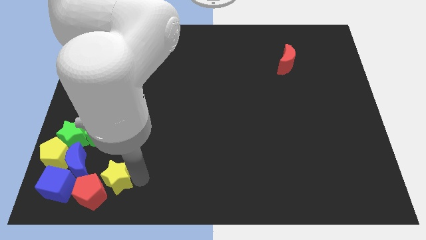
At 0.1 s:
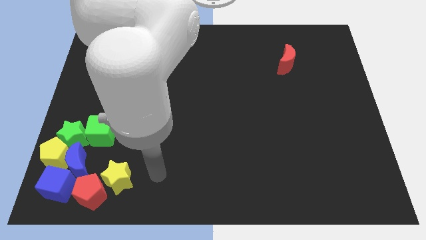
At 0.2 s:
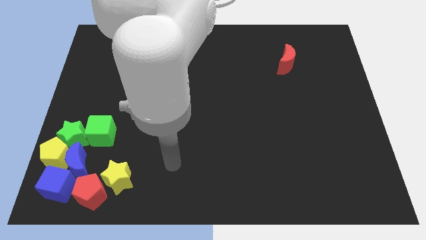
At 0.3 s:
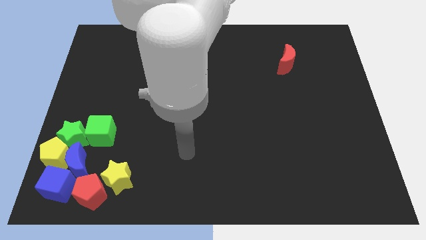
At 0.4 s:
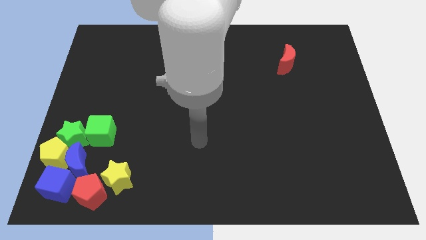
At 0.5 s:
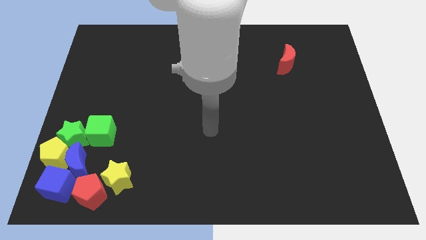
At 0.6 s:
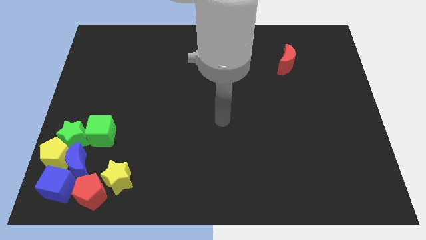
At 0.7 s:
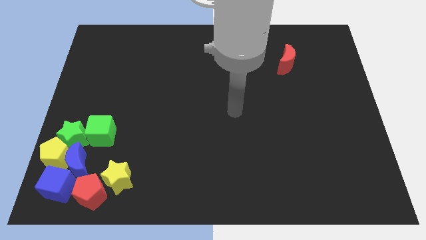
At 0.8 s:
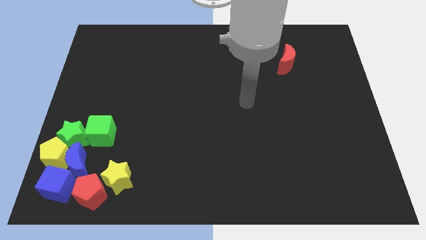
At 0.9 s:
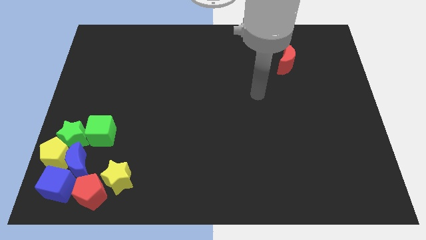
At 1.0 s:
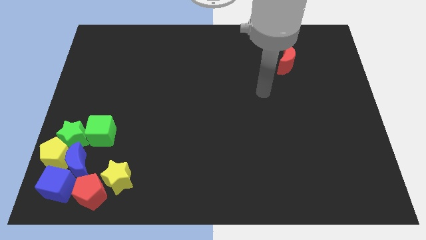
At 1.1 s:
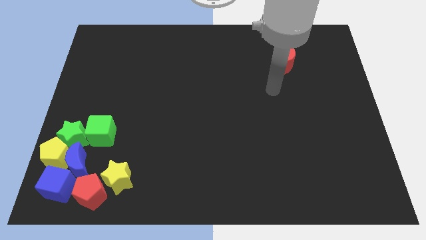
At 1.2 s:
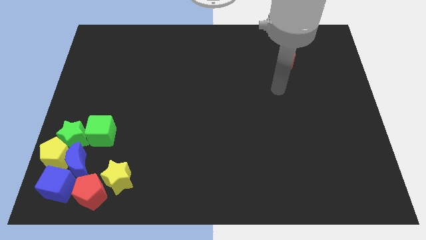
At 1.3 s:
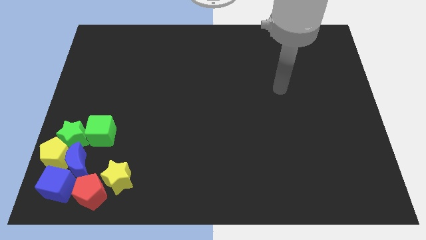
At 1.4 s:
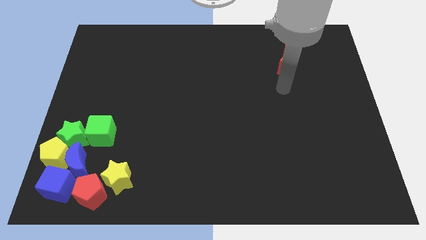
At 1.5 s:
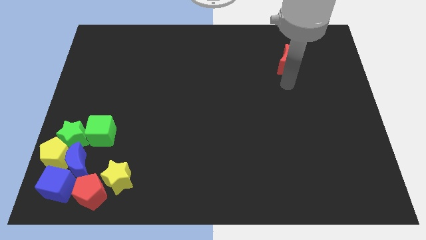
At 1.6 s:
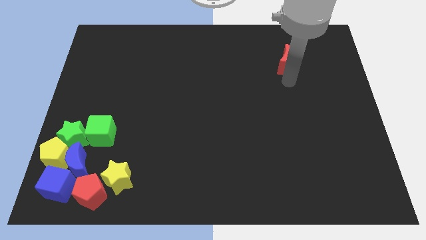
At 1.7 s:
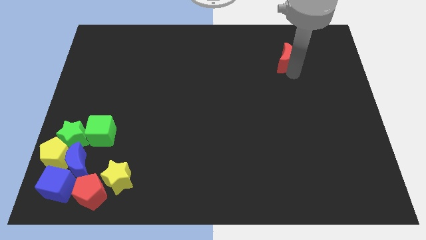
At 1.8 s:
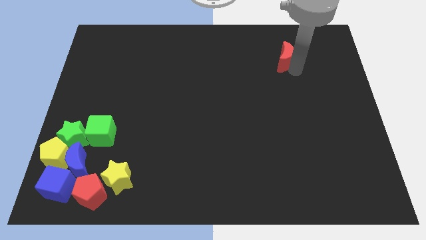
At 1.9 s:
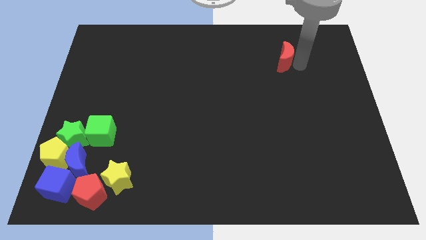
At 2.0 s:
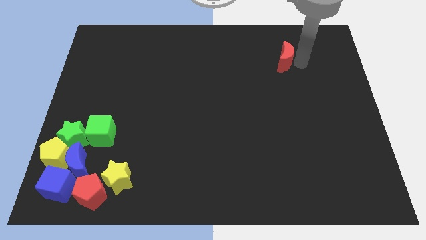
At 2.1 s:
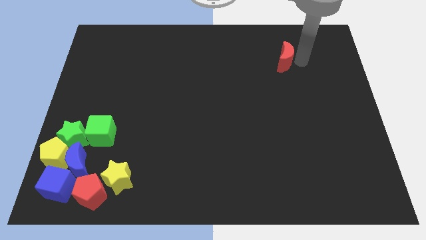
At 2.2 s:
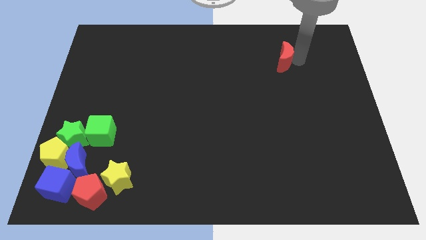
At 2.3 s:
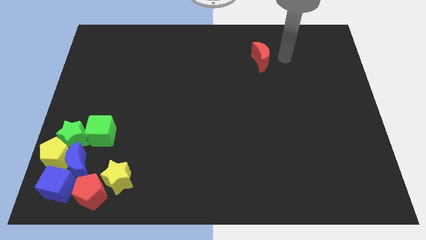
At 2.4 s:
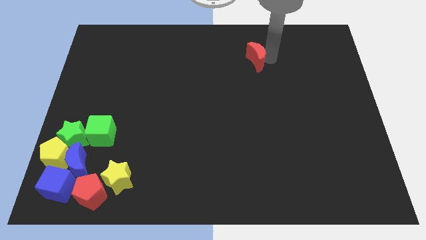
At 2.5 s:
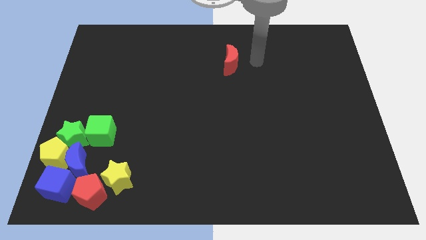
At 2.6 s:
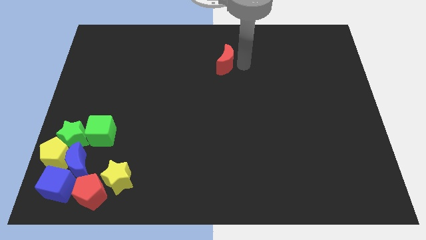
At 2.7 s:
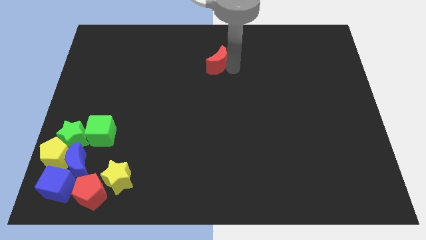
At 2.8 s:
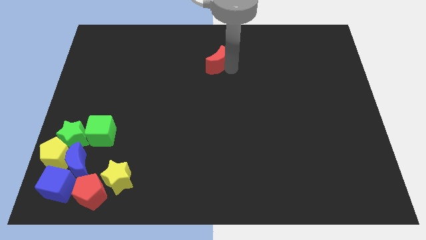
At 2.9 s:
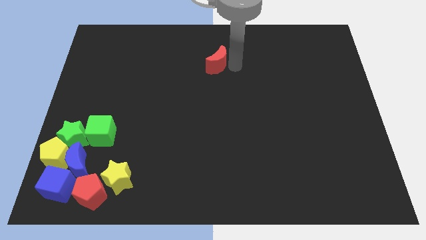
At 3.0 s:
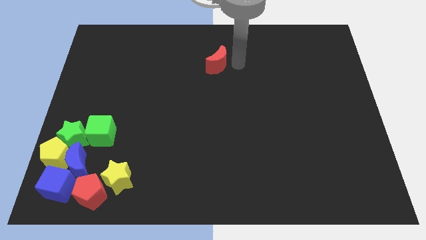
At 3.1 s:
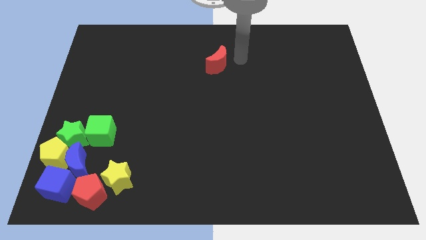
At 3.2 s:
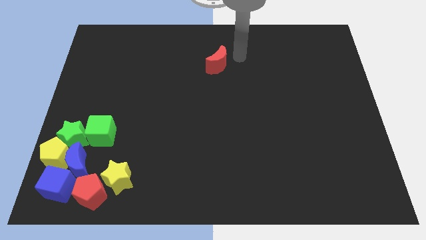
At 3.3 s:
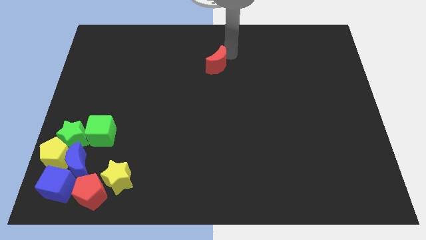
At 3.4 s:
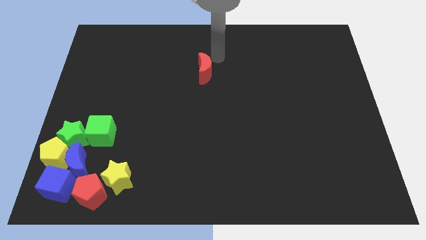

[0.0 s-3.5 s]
push the red crescent towards the top center of the board

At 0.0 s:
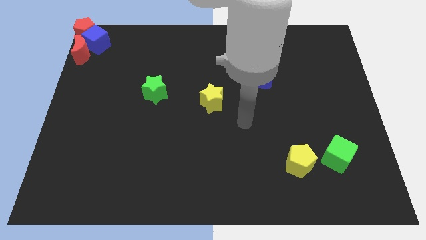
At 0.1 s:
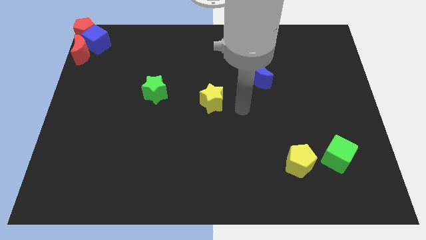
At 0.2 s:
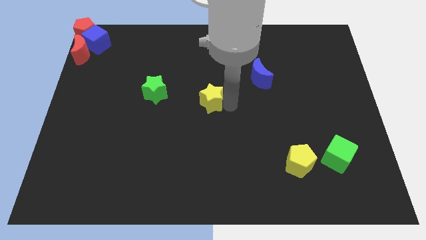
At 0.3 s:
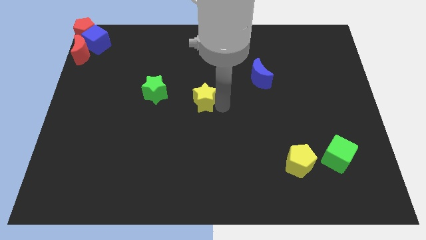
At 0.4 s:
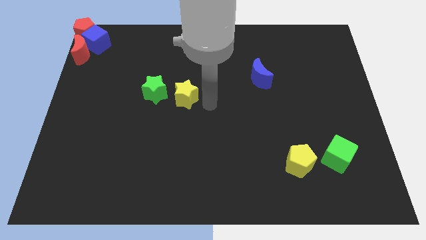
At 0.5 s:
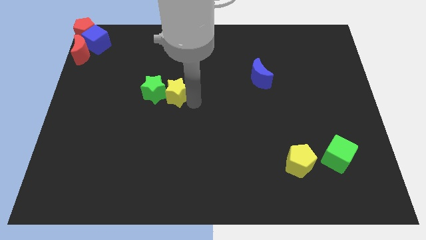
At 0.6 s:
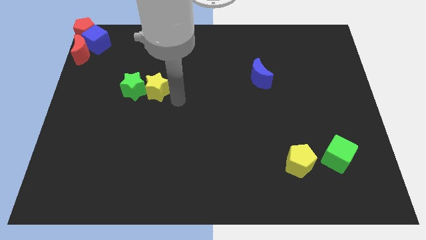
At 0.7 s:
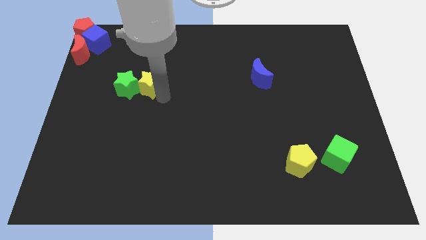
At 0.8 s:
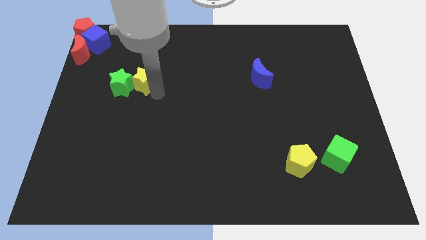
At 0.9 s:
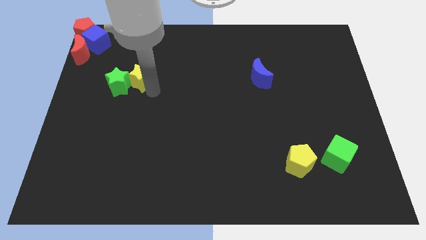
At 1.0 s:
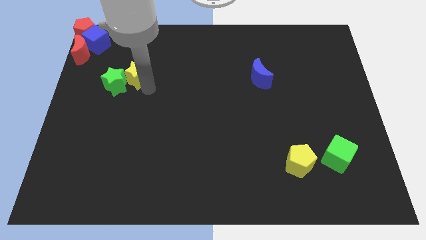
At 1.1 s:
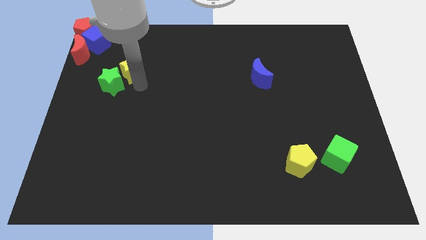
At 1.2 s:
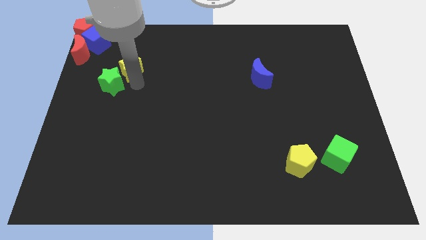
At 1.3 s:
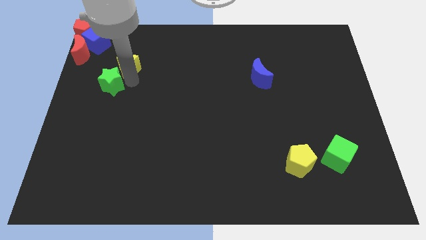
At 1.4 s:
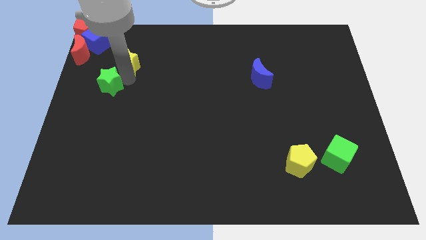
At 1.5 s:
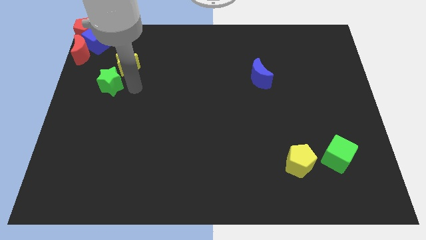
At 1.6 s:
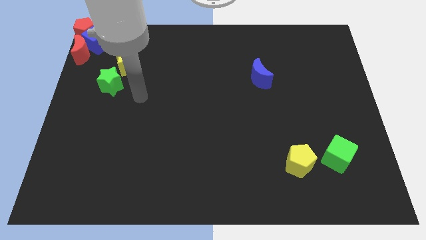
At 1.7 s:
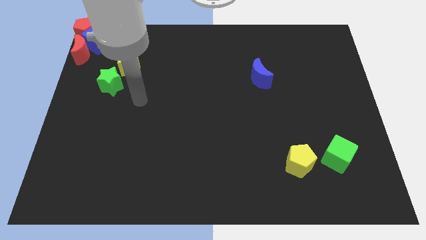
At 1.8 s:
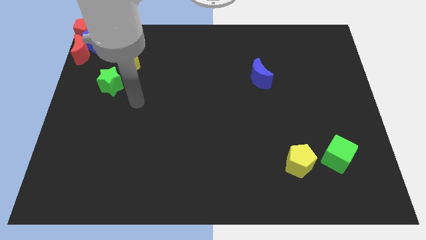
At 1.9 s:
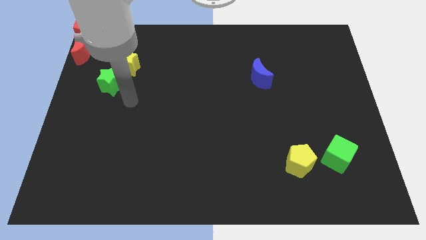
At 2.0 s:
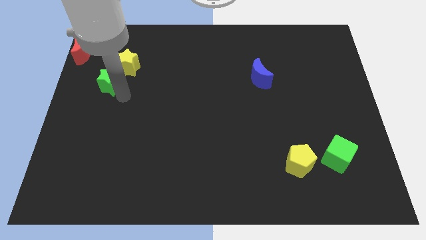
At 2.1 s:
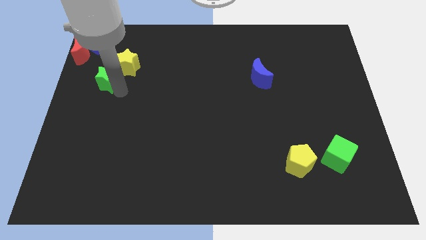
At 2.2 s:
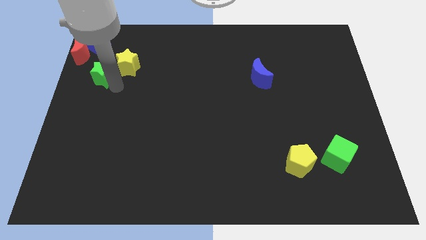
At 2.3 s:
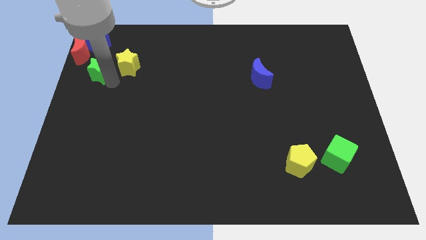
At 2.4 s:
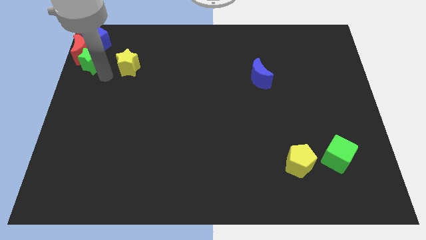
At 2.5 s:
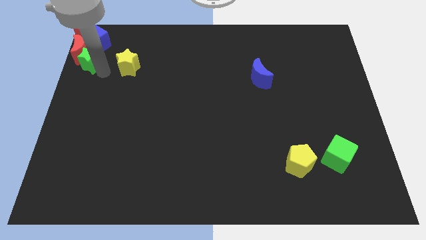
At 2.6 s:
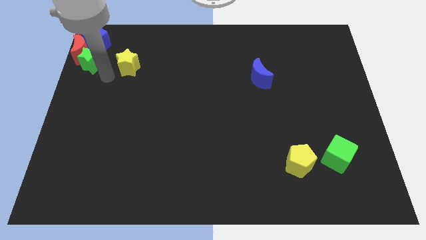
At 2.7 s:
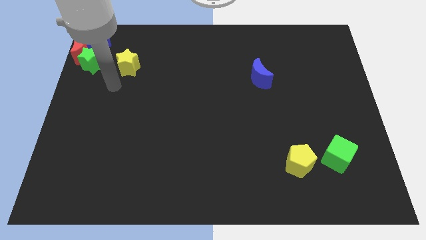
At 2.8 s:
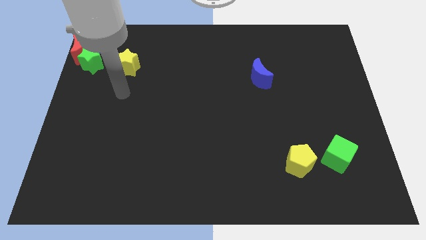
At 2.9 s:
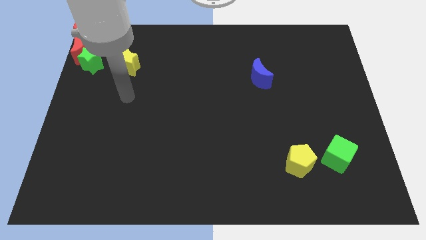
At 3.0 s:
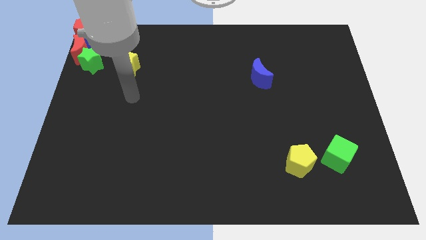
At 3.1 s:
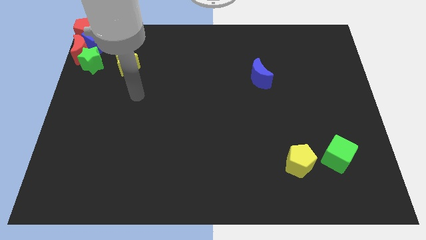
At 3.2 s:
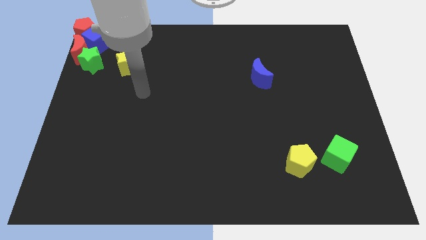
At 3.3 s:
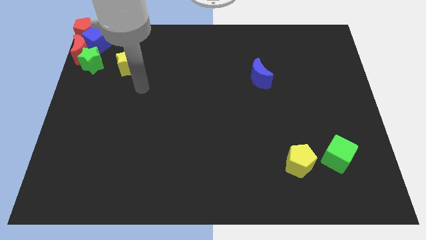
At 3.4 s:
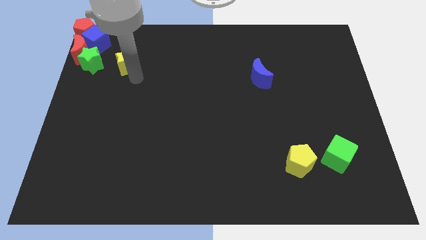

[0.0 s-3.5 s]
push the green star into the red crescent

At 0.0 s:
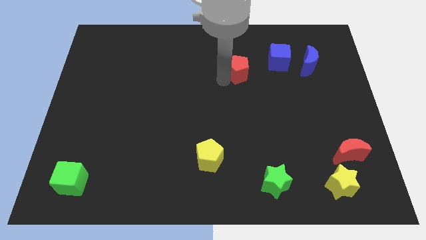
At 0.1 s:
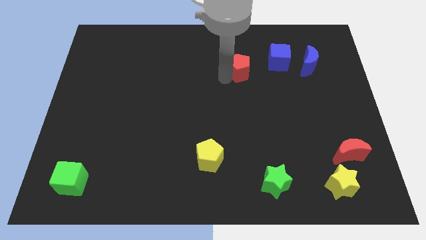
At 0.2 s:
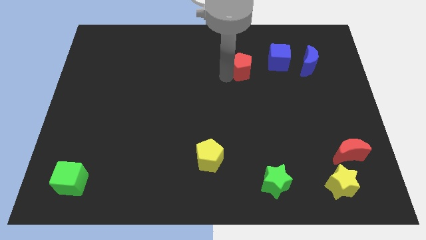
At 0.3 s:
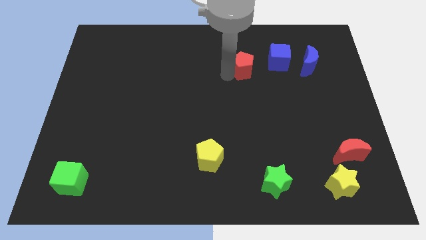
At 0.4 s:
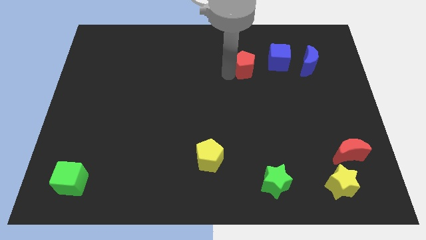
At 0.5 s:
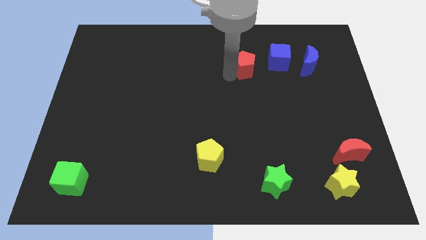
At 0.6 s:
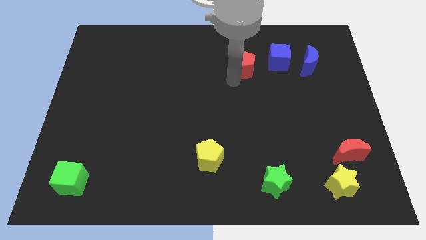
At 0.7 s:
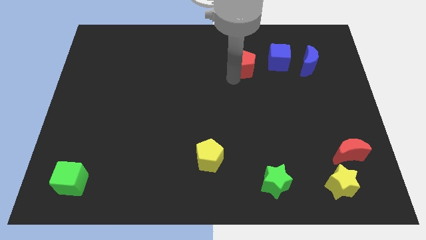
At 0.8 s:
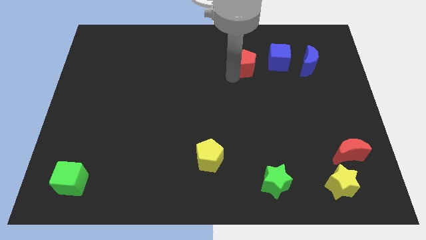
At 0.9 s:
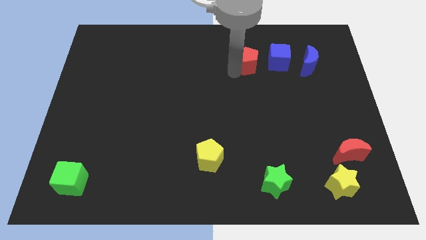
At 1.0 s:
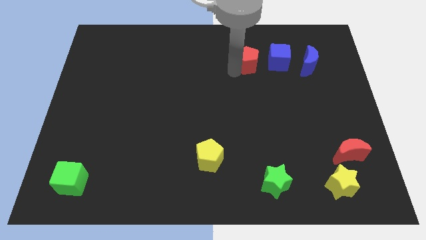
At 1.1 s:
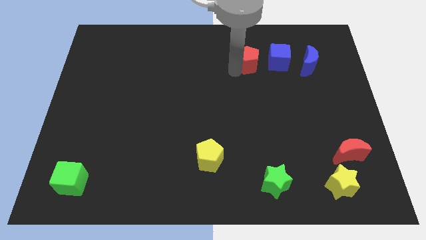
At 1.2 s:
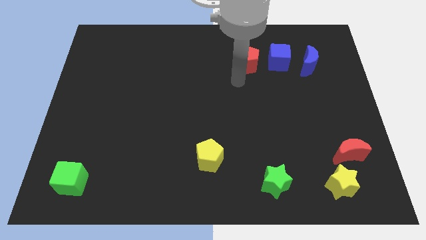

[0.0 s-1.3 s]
place the arm towards the left side of the red pentagon

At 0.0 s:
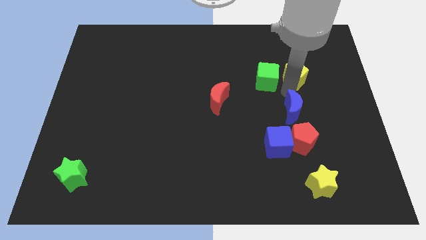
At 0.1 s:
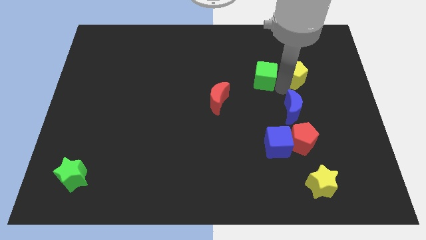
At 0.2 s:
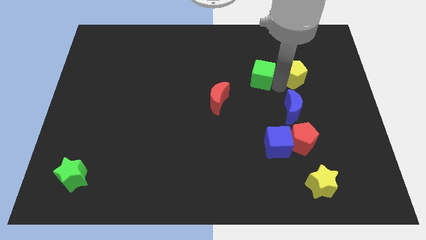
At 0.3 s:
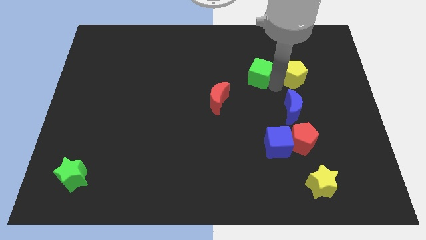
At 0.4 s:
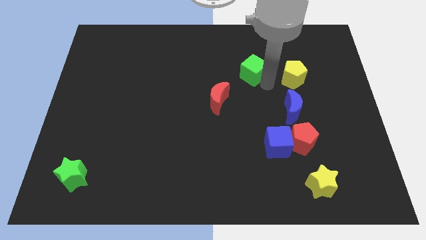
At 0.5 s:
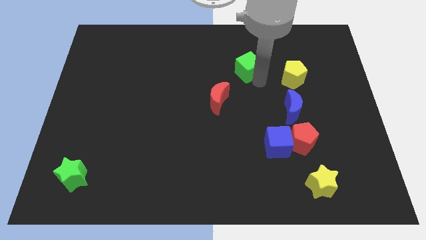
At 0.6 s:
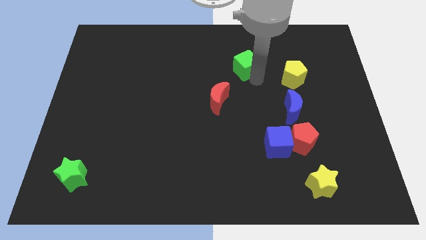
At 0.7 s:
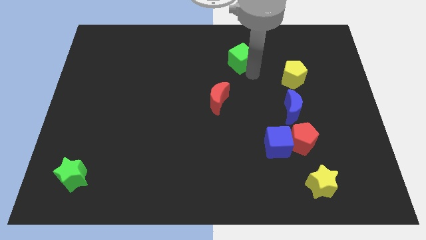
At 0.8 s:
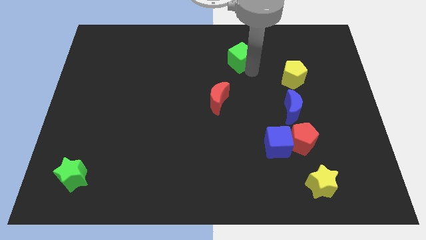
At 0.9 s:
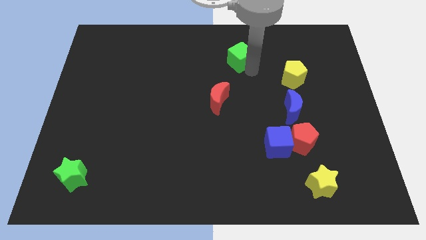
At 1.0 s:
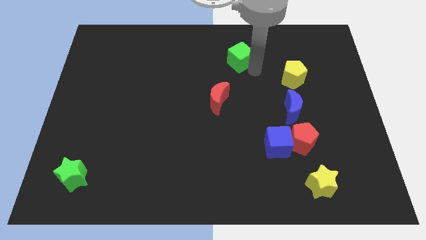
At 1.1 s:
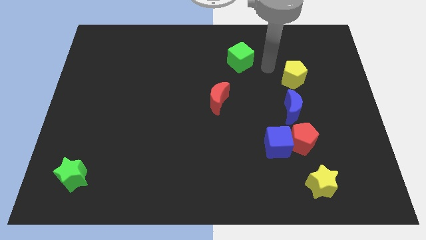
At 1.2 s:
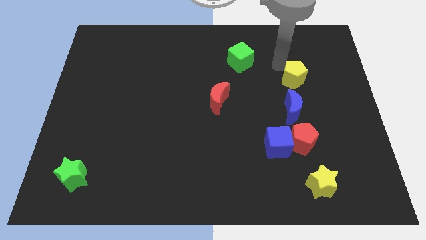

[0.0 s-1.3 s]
push green block to the top of the red moon
